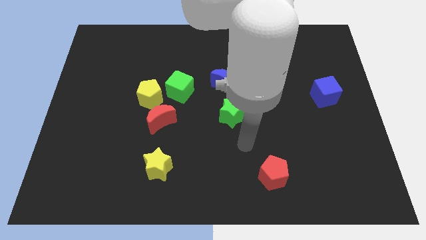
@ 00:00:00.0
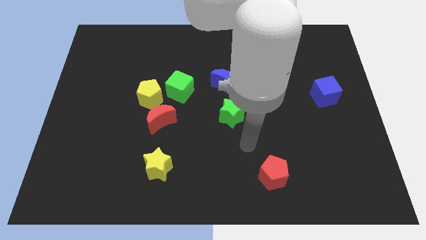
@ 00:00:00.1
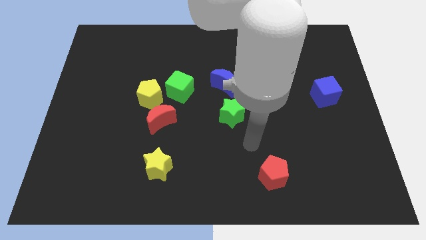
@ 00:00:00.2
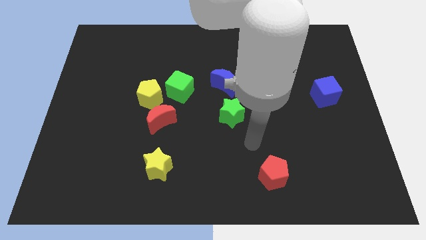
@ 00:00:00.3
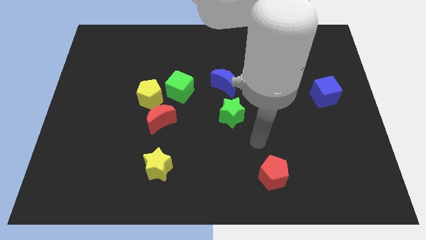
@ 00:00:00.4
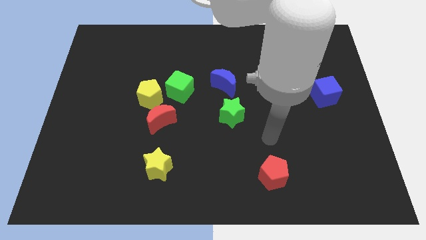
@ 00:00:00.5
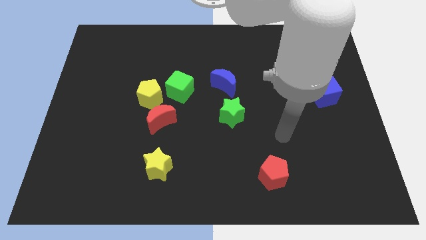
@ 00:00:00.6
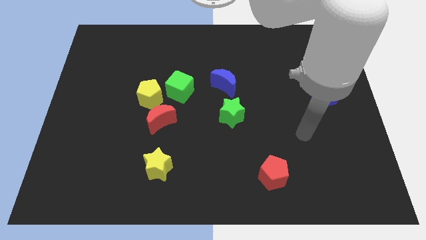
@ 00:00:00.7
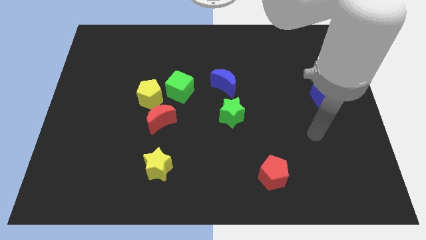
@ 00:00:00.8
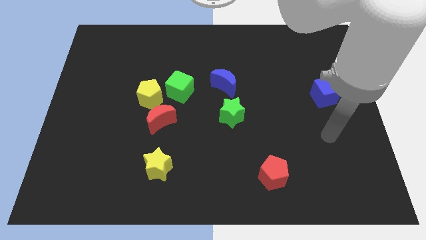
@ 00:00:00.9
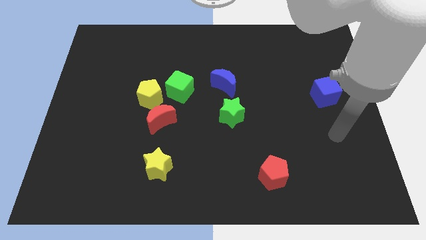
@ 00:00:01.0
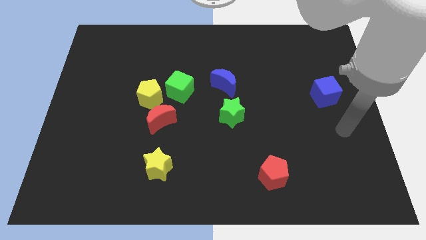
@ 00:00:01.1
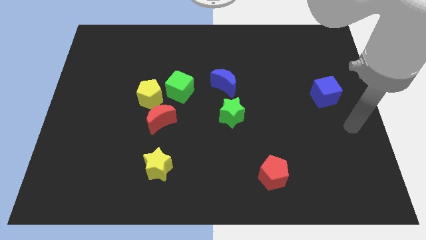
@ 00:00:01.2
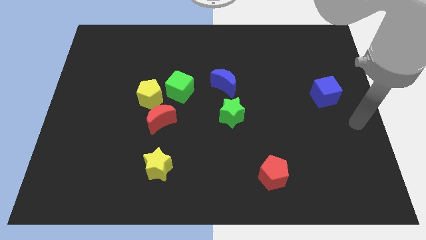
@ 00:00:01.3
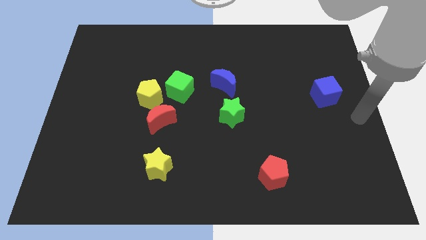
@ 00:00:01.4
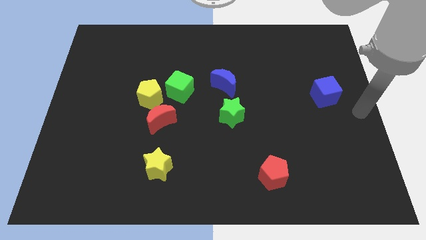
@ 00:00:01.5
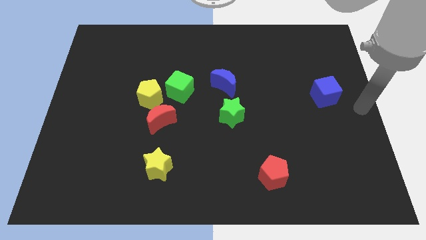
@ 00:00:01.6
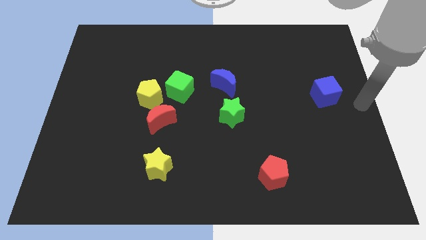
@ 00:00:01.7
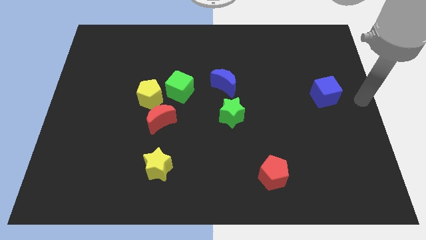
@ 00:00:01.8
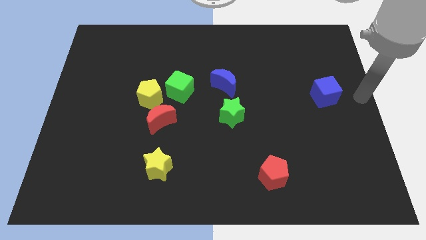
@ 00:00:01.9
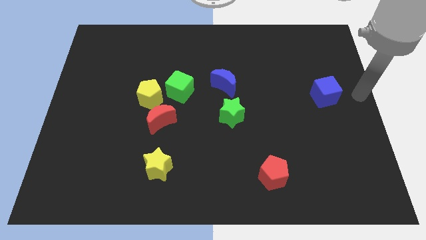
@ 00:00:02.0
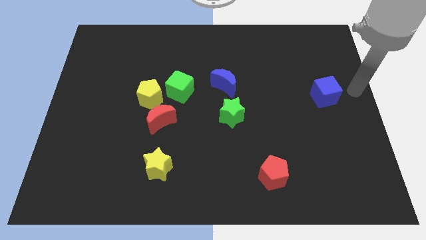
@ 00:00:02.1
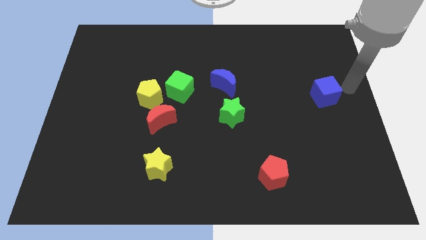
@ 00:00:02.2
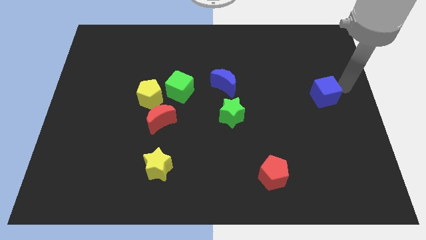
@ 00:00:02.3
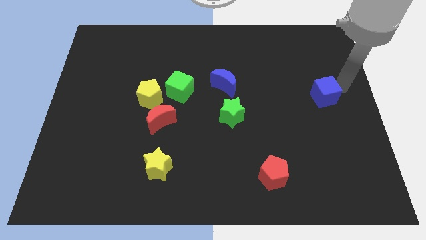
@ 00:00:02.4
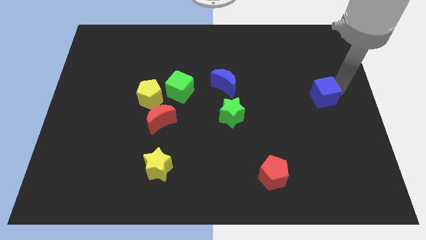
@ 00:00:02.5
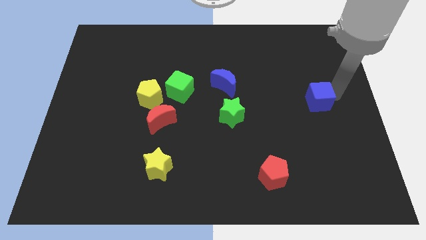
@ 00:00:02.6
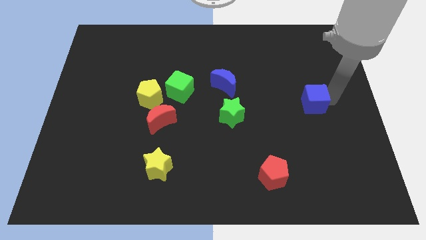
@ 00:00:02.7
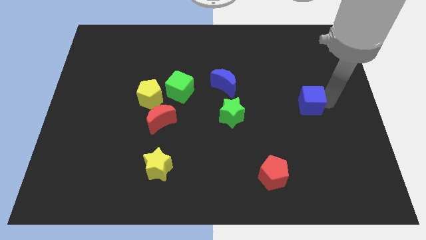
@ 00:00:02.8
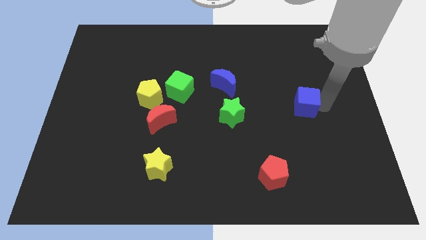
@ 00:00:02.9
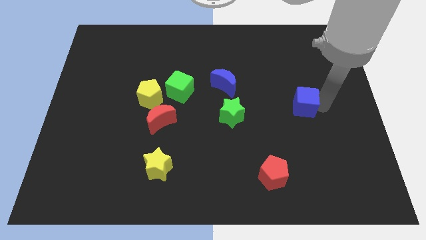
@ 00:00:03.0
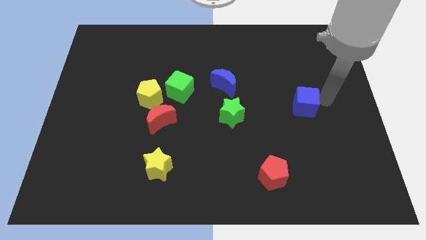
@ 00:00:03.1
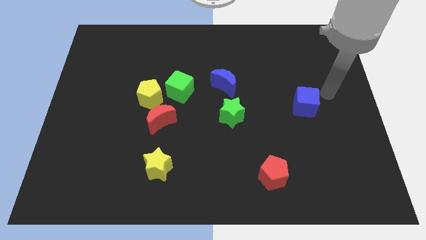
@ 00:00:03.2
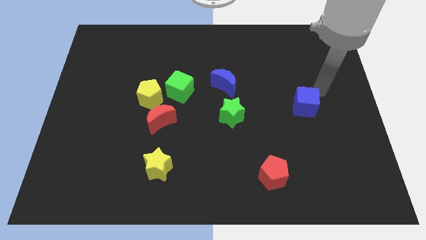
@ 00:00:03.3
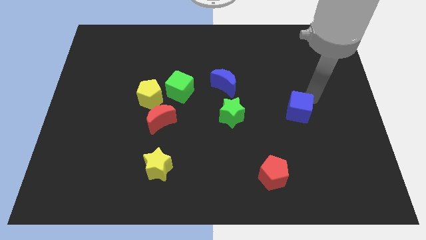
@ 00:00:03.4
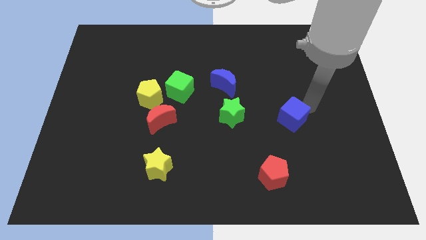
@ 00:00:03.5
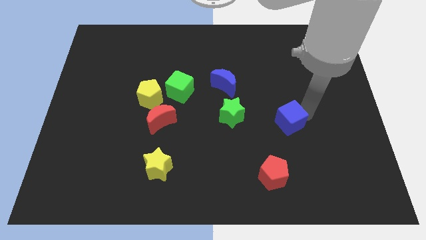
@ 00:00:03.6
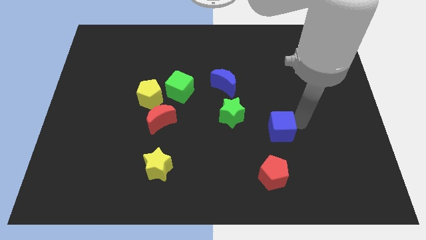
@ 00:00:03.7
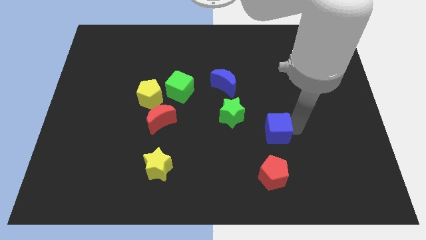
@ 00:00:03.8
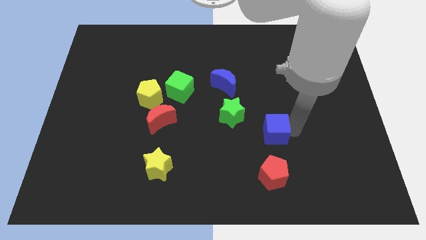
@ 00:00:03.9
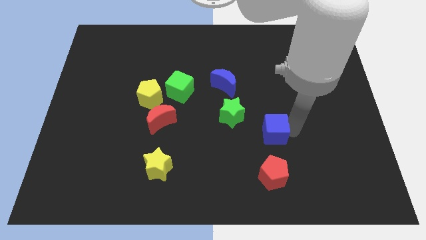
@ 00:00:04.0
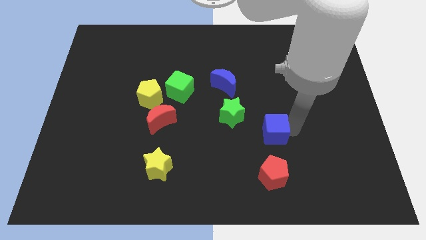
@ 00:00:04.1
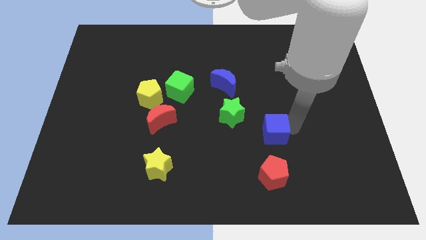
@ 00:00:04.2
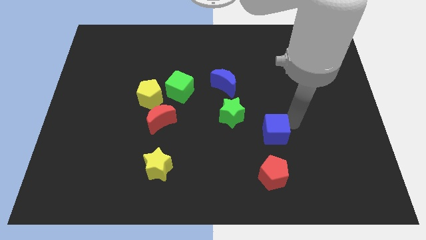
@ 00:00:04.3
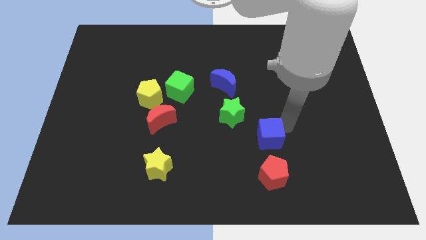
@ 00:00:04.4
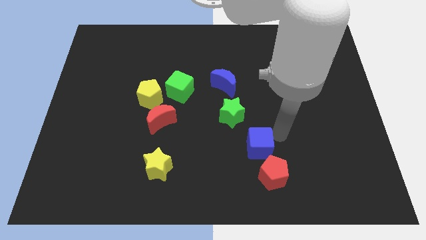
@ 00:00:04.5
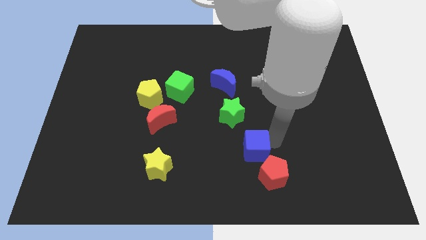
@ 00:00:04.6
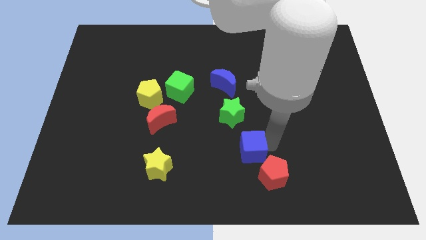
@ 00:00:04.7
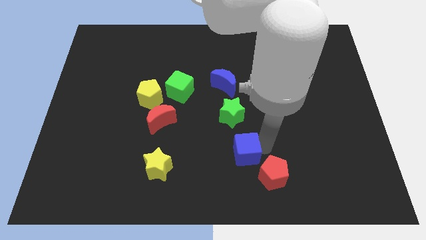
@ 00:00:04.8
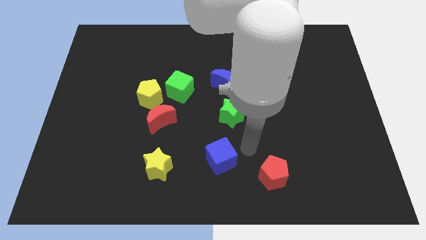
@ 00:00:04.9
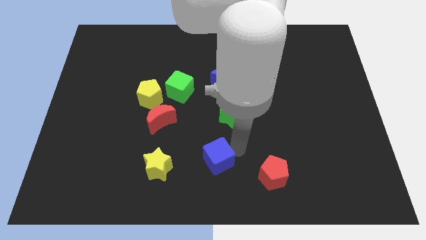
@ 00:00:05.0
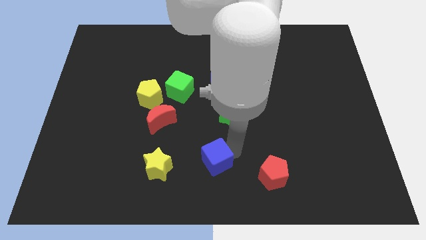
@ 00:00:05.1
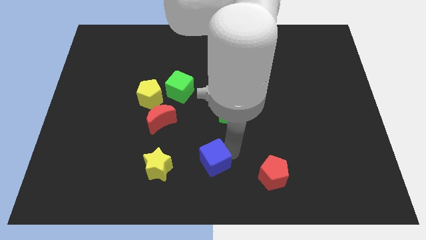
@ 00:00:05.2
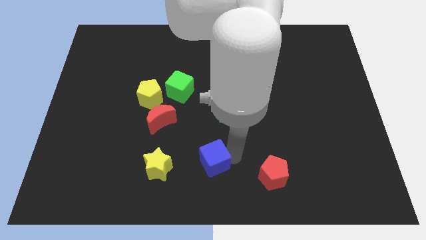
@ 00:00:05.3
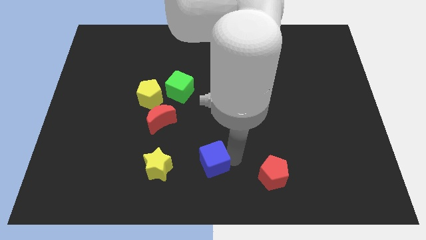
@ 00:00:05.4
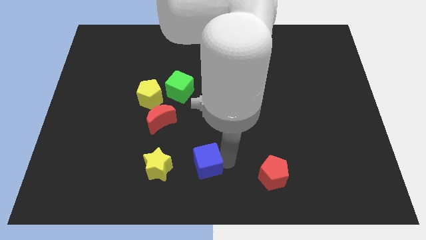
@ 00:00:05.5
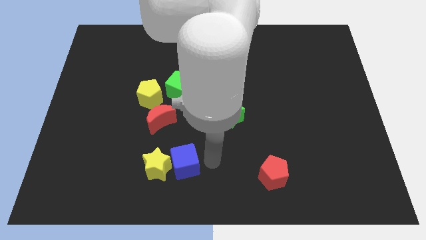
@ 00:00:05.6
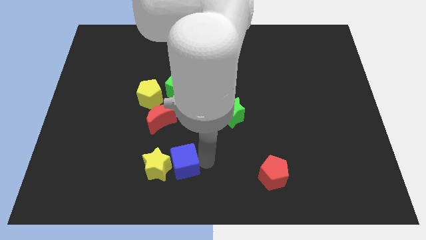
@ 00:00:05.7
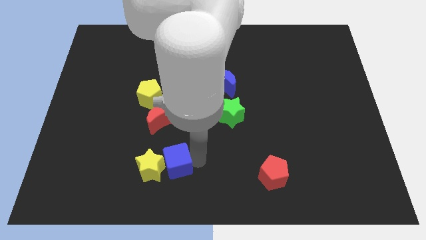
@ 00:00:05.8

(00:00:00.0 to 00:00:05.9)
move the blue cube close to the yellow star

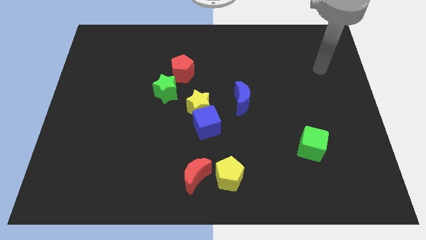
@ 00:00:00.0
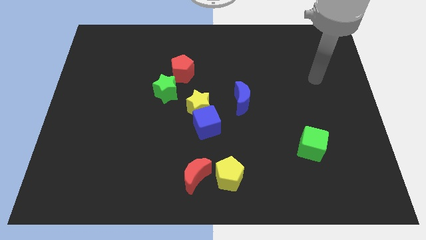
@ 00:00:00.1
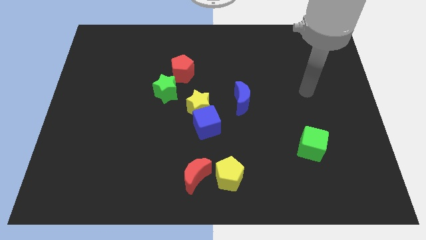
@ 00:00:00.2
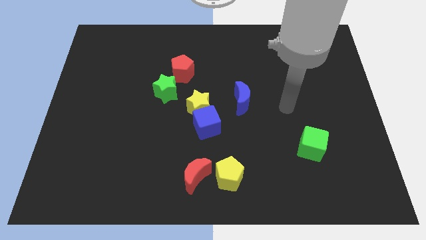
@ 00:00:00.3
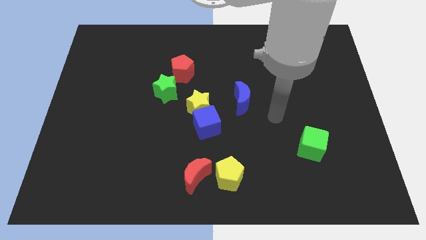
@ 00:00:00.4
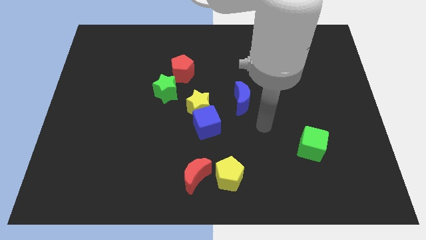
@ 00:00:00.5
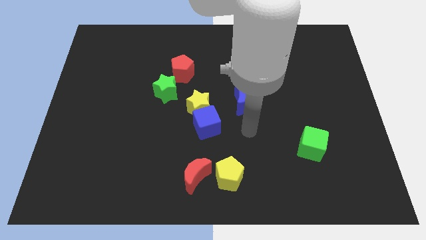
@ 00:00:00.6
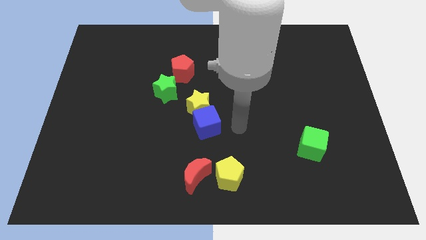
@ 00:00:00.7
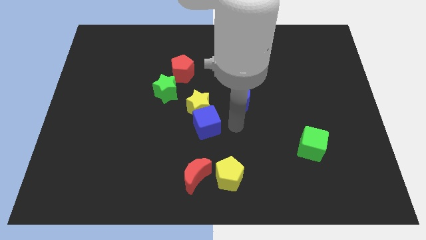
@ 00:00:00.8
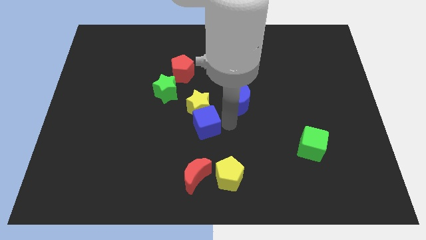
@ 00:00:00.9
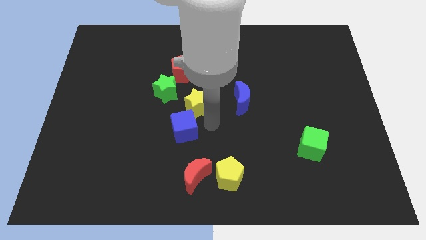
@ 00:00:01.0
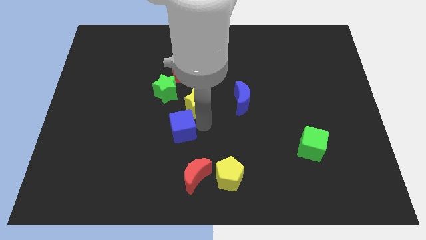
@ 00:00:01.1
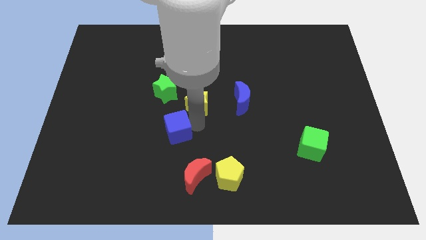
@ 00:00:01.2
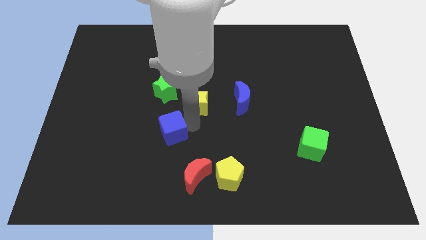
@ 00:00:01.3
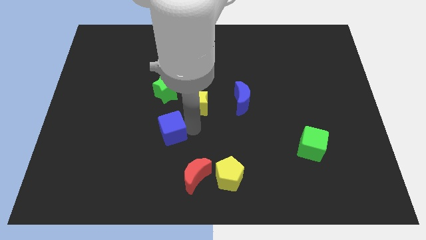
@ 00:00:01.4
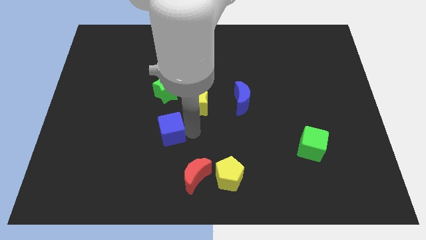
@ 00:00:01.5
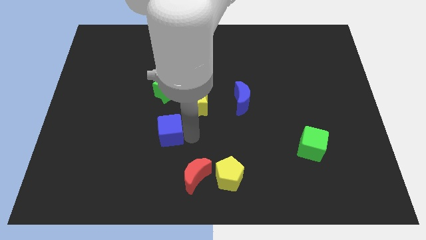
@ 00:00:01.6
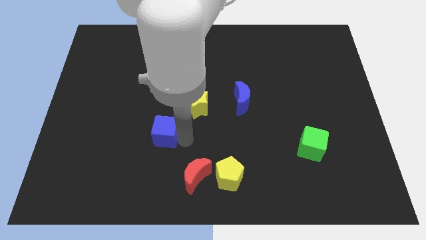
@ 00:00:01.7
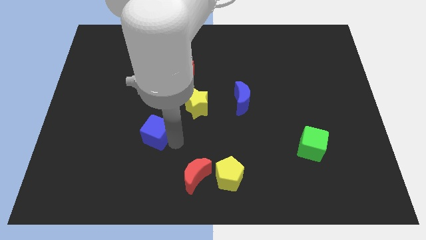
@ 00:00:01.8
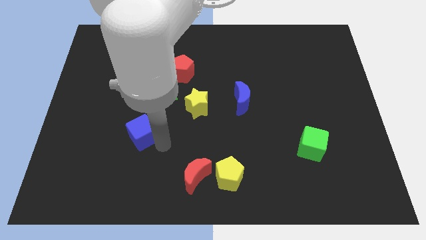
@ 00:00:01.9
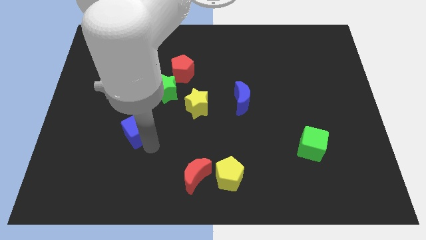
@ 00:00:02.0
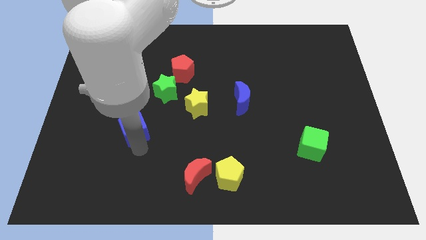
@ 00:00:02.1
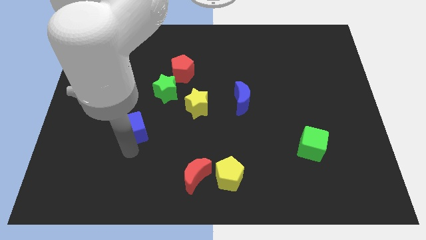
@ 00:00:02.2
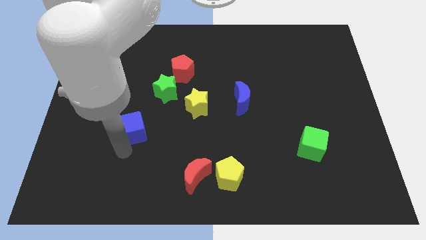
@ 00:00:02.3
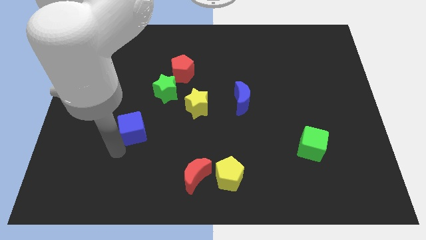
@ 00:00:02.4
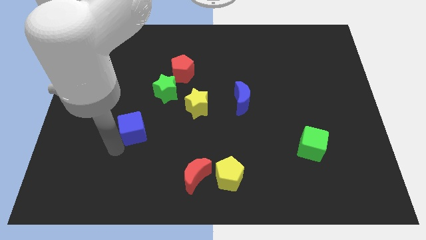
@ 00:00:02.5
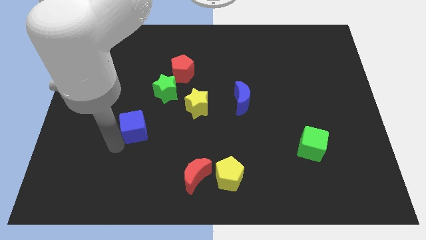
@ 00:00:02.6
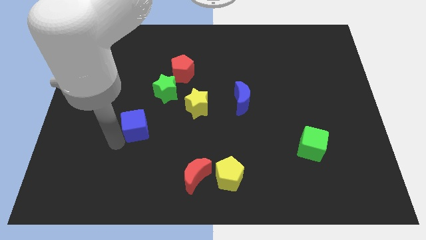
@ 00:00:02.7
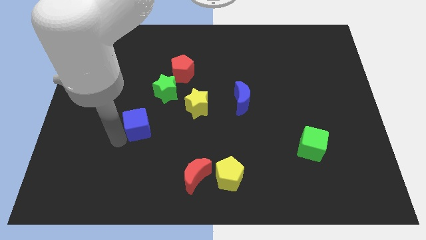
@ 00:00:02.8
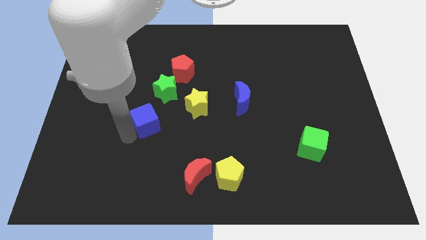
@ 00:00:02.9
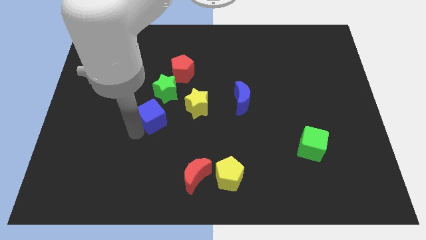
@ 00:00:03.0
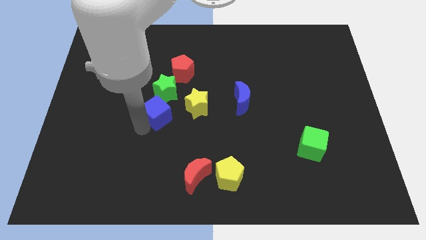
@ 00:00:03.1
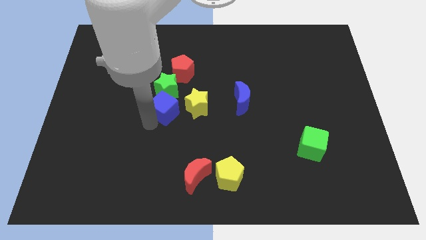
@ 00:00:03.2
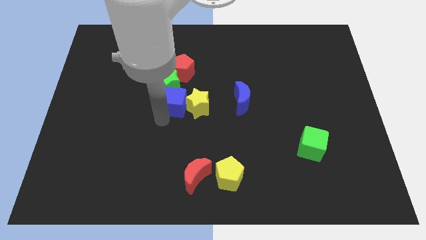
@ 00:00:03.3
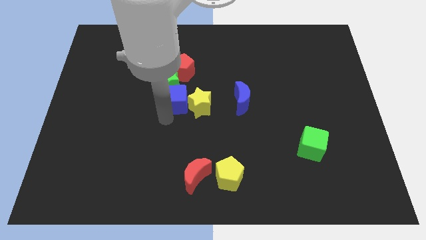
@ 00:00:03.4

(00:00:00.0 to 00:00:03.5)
push the blue cube towards the green star
